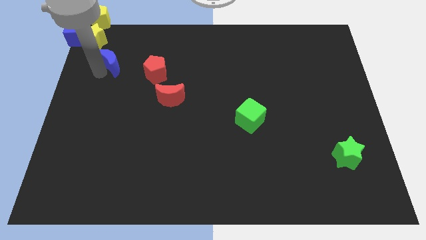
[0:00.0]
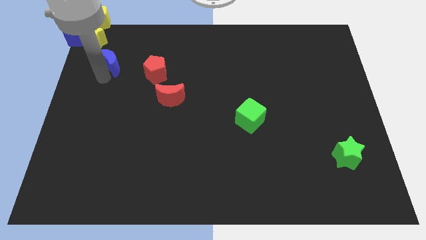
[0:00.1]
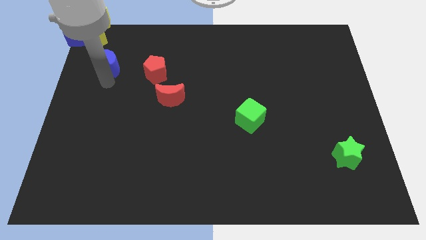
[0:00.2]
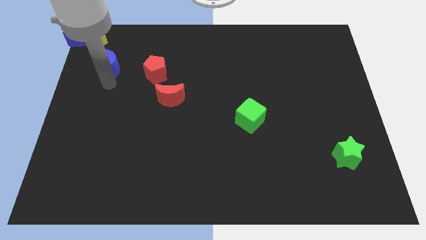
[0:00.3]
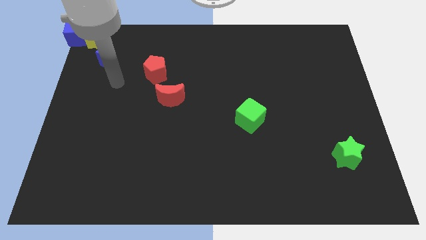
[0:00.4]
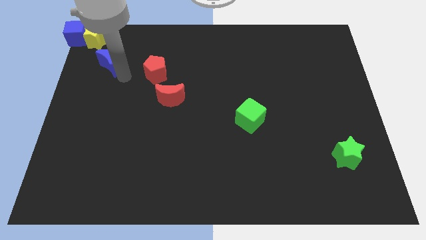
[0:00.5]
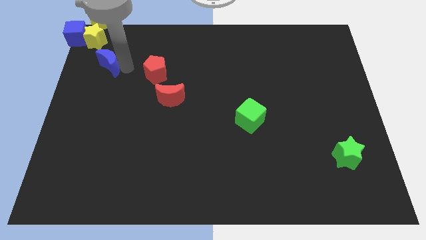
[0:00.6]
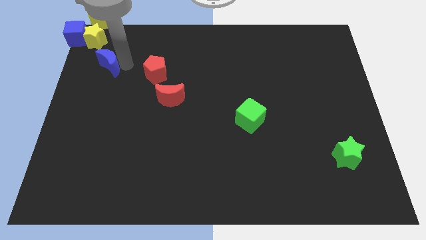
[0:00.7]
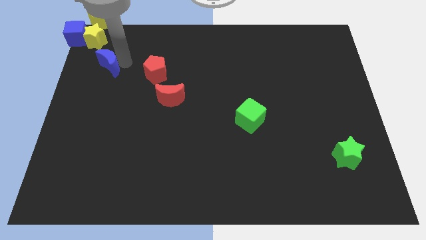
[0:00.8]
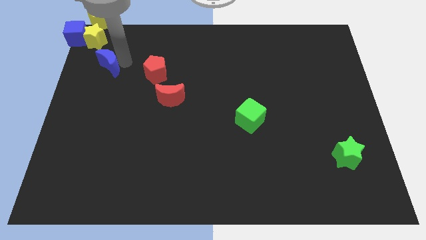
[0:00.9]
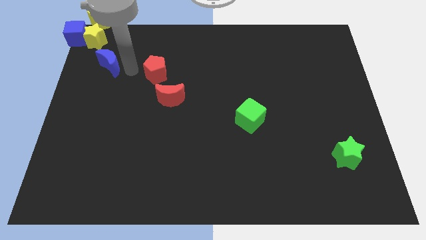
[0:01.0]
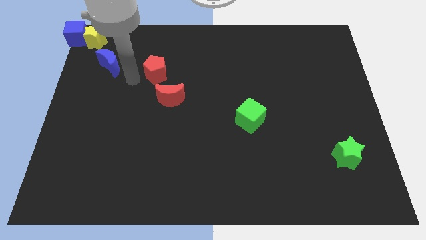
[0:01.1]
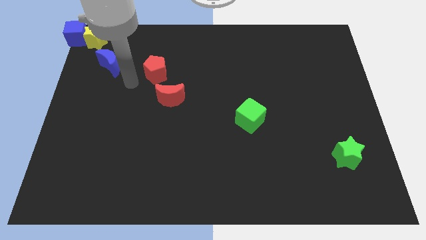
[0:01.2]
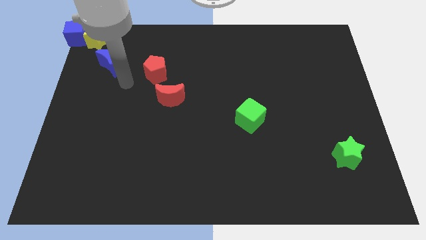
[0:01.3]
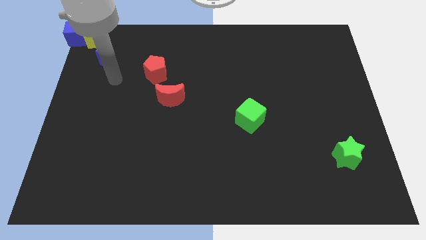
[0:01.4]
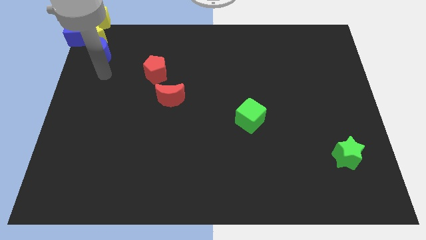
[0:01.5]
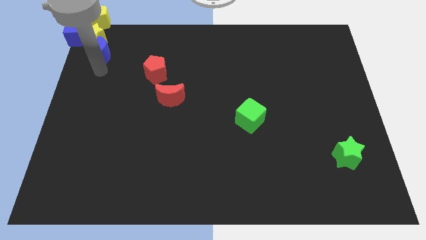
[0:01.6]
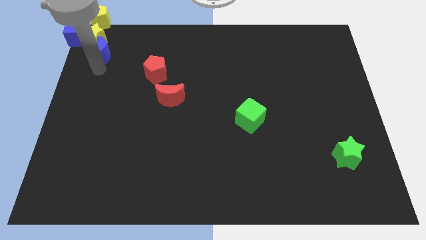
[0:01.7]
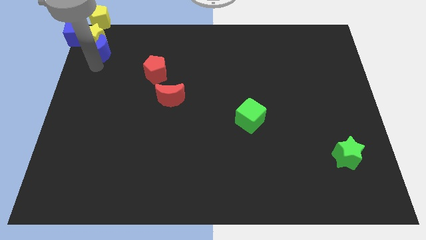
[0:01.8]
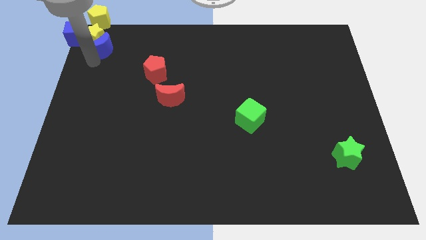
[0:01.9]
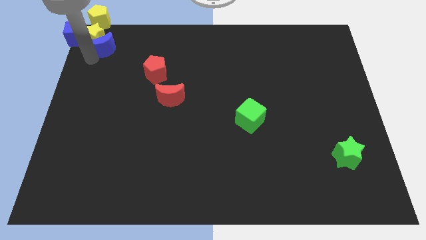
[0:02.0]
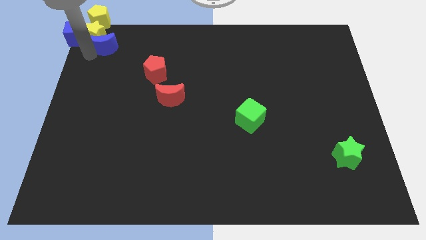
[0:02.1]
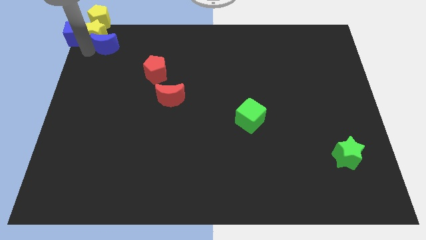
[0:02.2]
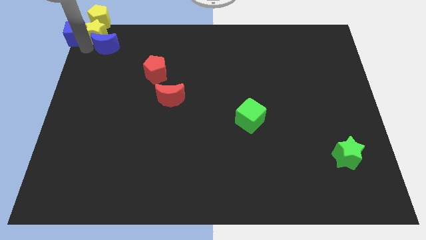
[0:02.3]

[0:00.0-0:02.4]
move blue moon into group of stars

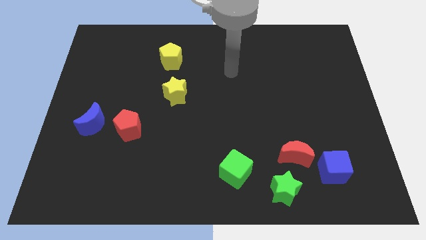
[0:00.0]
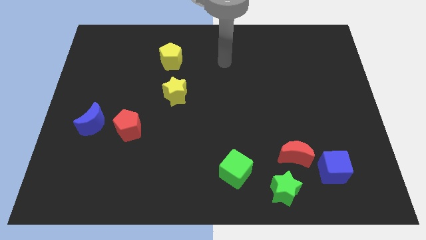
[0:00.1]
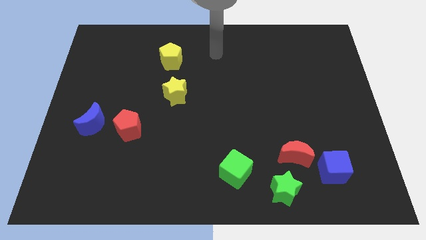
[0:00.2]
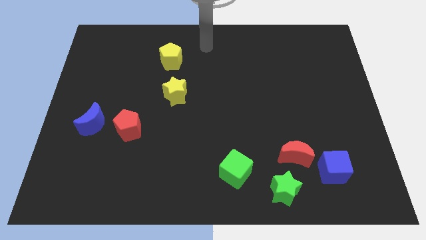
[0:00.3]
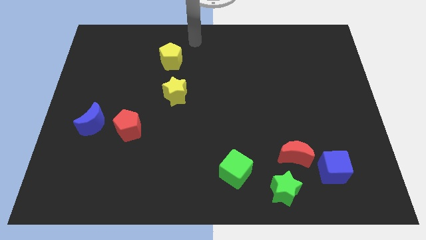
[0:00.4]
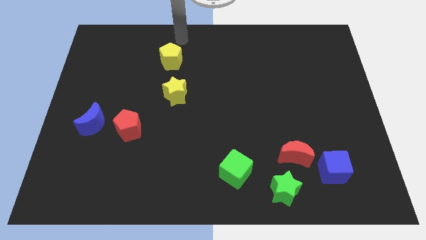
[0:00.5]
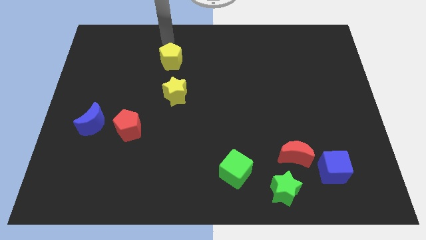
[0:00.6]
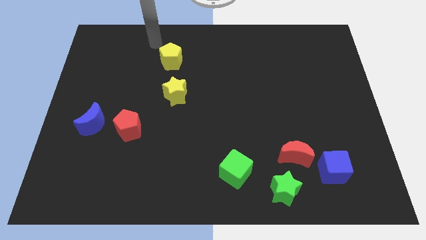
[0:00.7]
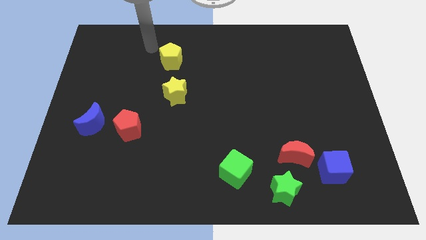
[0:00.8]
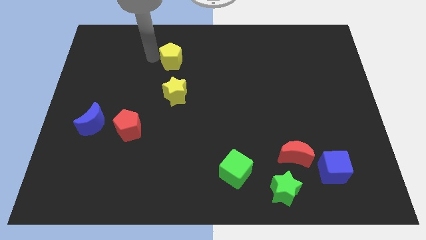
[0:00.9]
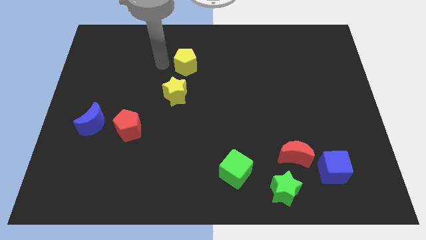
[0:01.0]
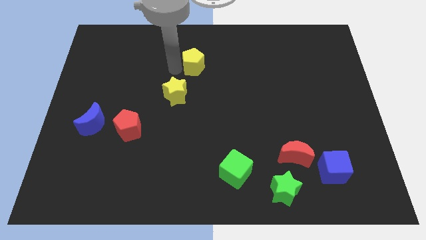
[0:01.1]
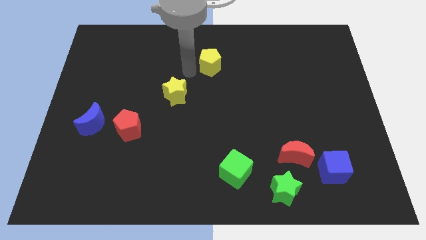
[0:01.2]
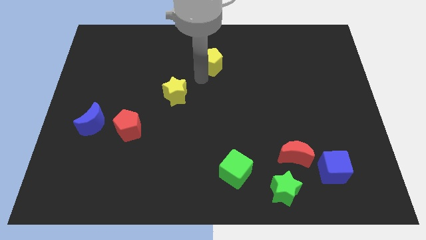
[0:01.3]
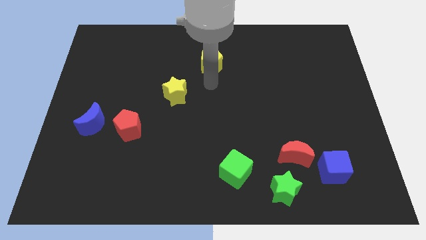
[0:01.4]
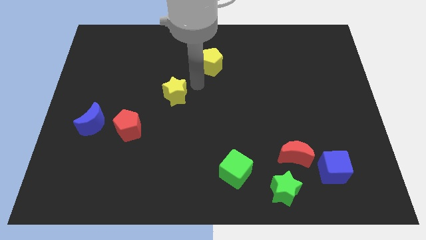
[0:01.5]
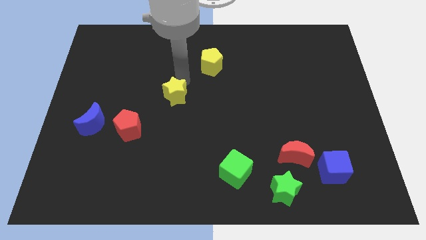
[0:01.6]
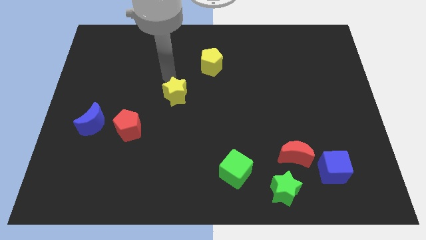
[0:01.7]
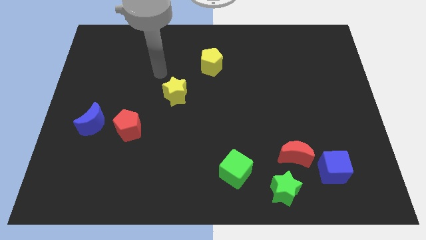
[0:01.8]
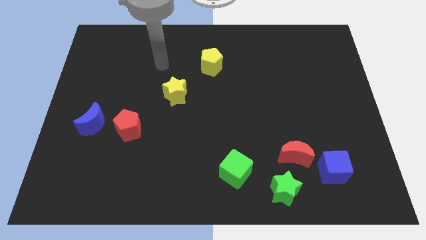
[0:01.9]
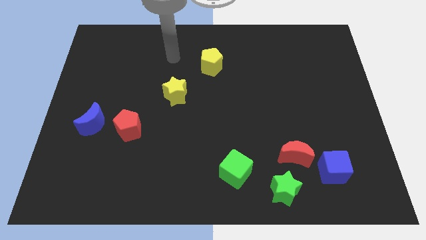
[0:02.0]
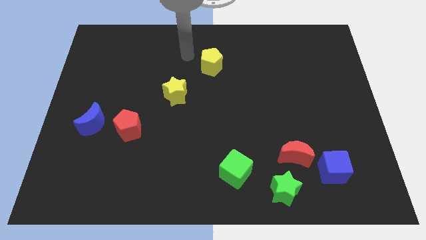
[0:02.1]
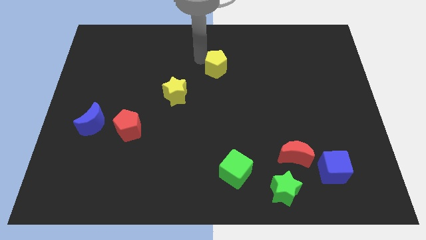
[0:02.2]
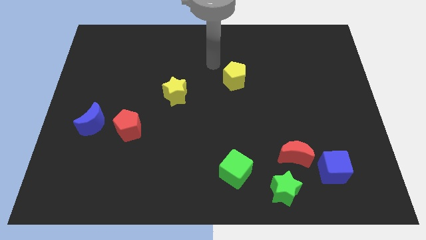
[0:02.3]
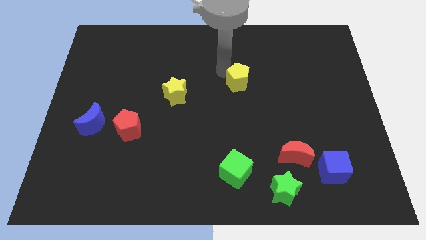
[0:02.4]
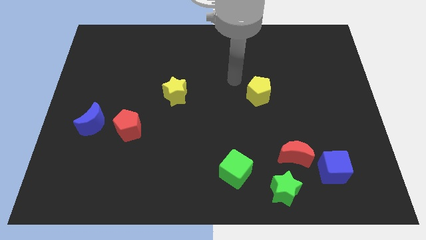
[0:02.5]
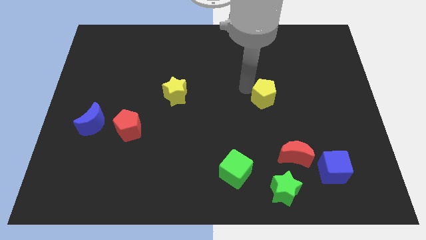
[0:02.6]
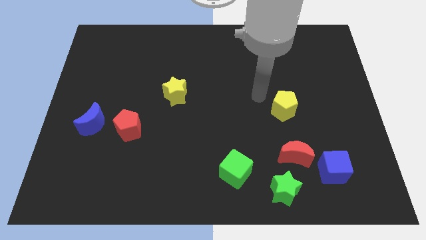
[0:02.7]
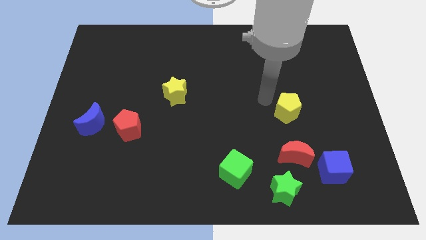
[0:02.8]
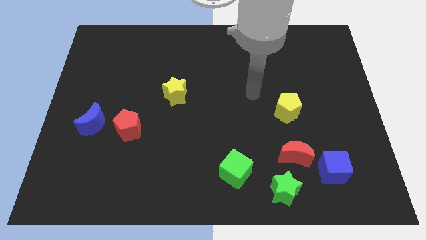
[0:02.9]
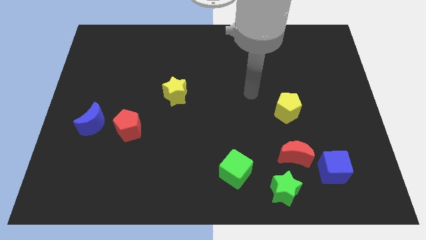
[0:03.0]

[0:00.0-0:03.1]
slide yellow pentagon down to the top of red moon

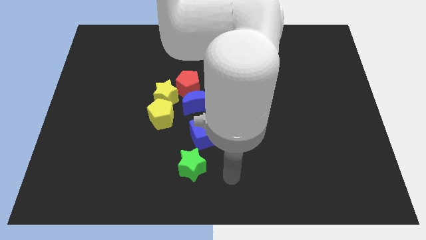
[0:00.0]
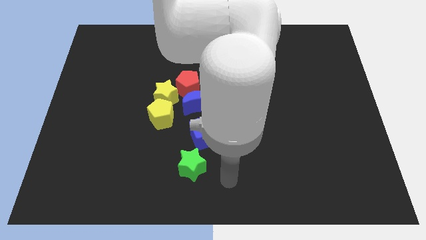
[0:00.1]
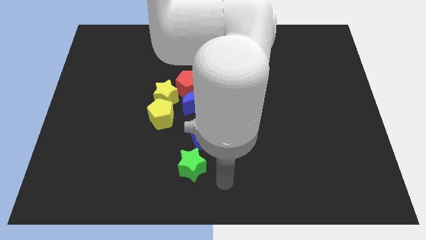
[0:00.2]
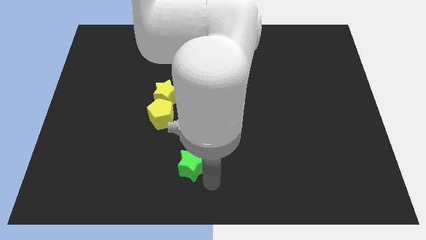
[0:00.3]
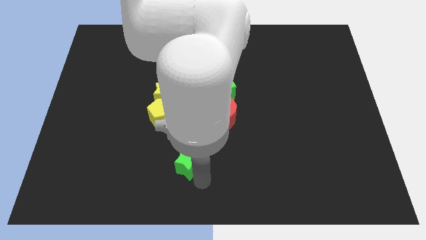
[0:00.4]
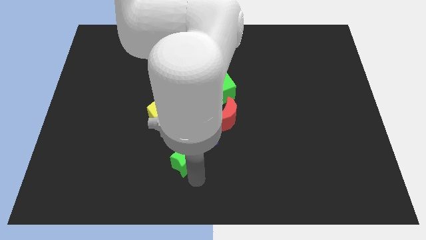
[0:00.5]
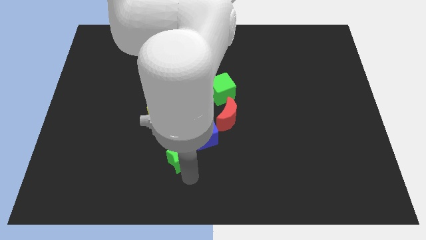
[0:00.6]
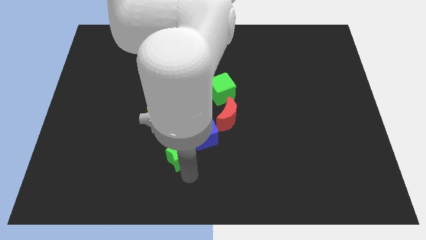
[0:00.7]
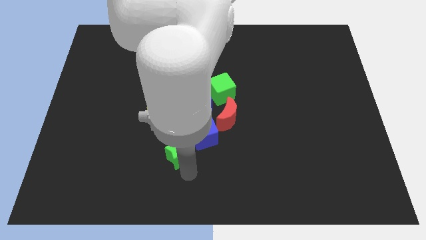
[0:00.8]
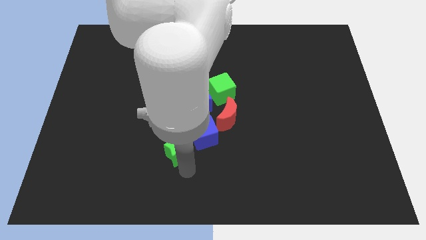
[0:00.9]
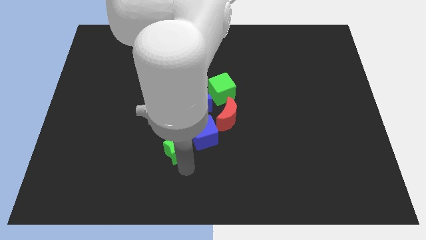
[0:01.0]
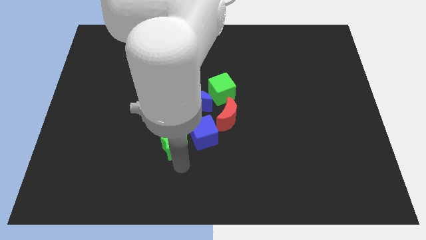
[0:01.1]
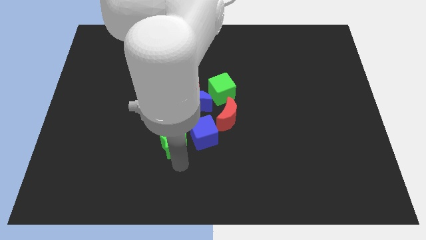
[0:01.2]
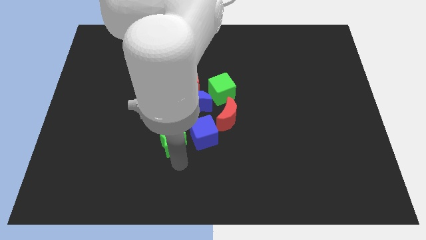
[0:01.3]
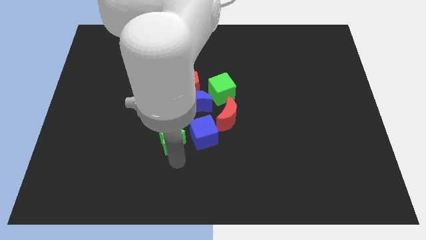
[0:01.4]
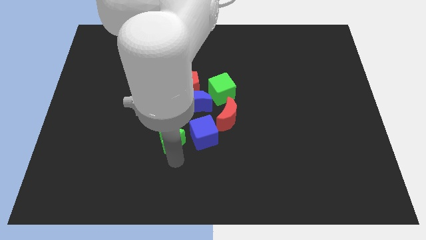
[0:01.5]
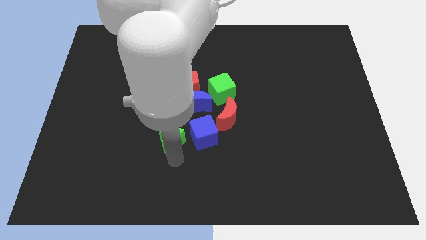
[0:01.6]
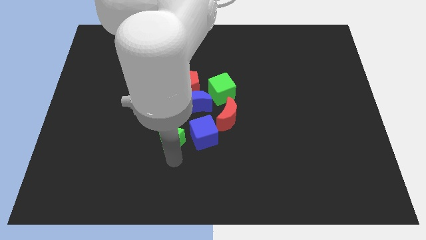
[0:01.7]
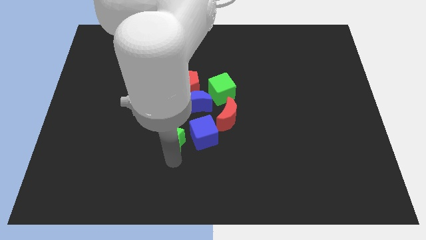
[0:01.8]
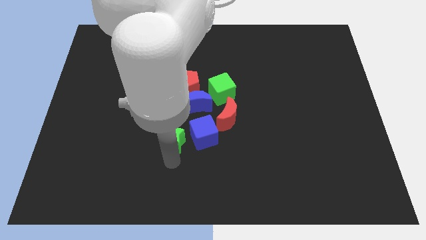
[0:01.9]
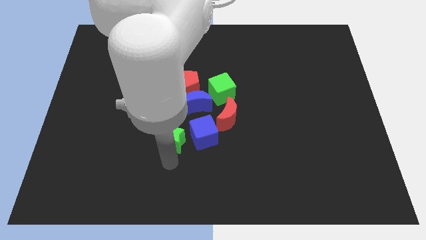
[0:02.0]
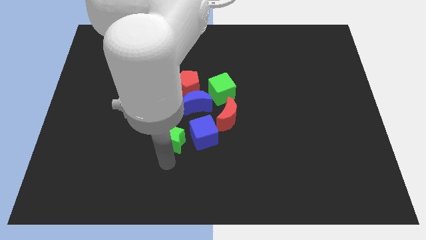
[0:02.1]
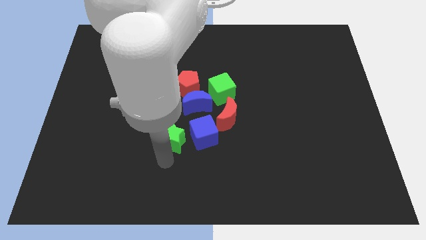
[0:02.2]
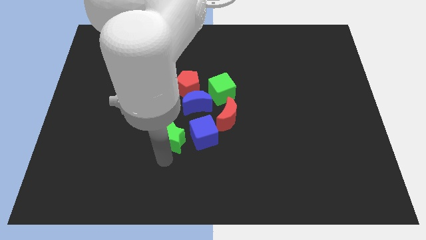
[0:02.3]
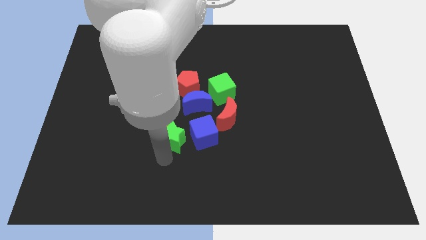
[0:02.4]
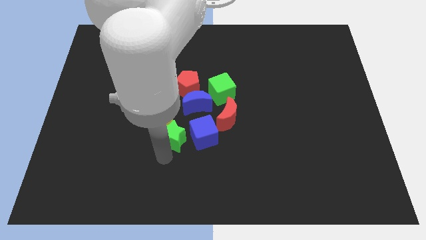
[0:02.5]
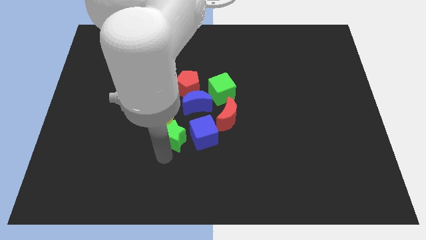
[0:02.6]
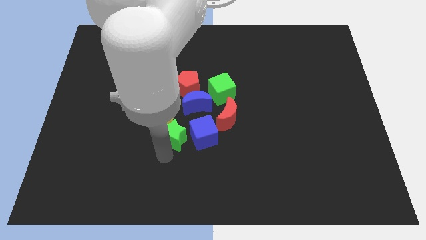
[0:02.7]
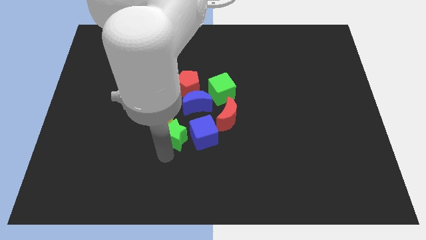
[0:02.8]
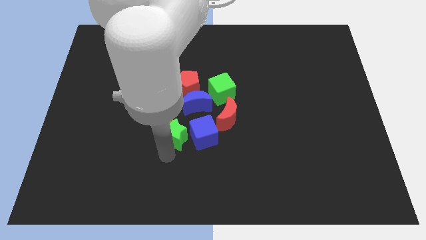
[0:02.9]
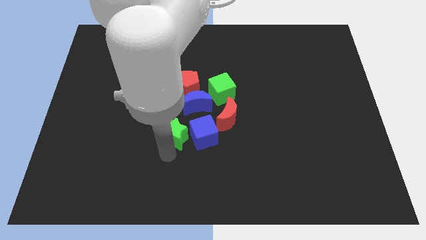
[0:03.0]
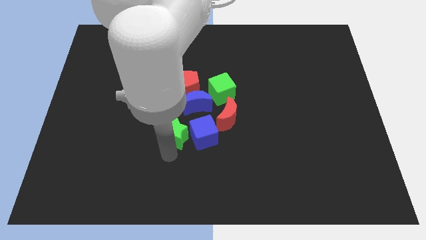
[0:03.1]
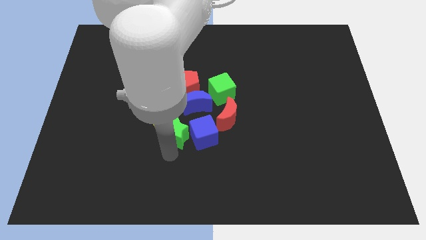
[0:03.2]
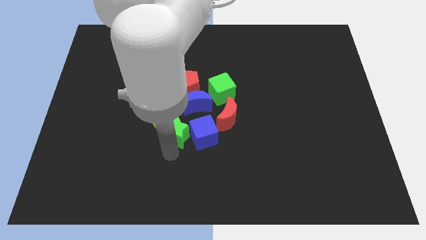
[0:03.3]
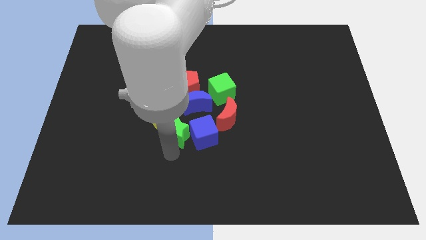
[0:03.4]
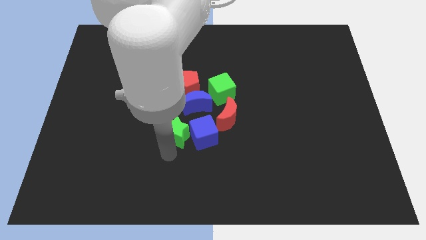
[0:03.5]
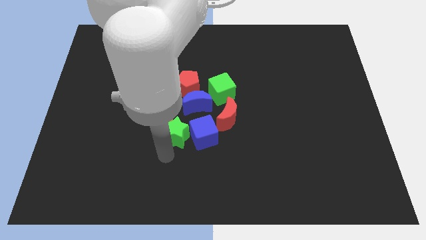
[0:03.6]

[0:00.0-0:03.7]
place the green star left to the blue cube
